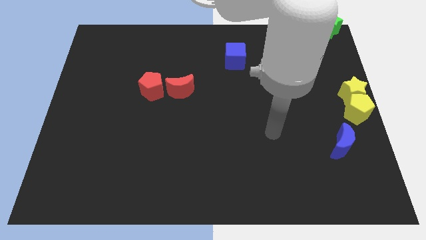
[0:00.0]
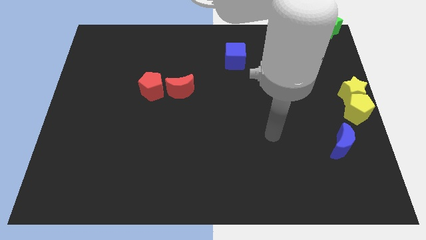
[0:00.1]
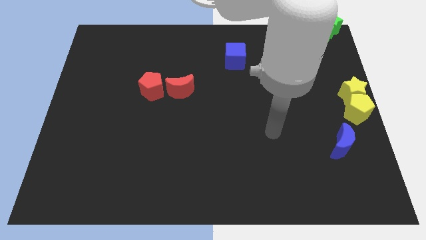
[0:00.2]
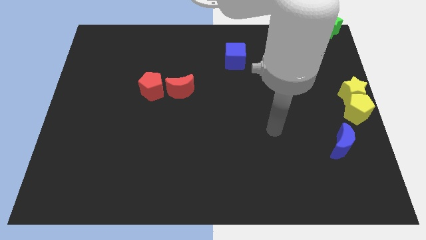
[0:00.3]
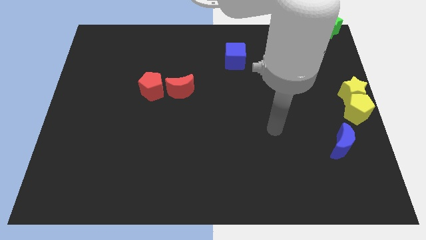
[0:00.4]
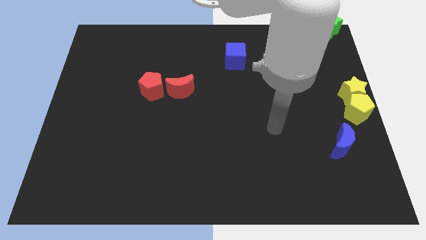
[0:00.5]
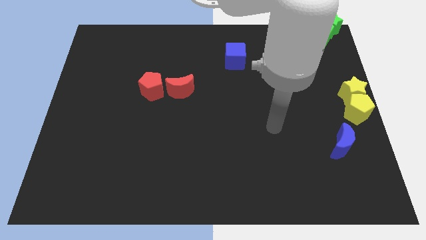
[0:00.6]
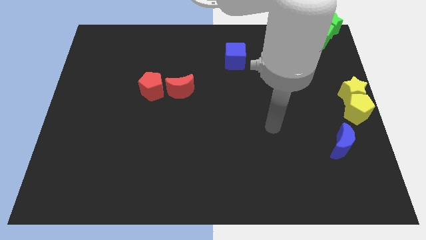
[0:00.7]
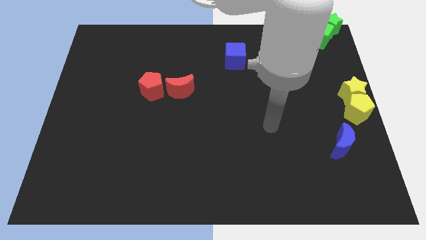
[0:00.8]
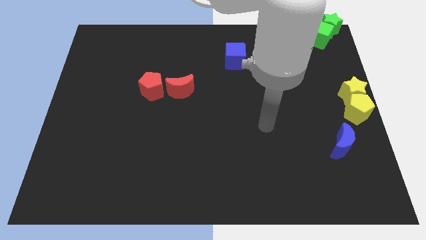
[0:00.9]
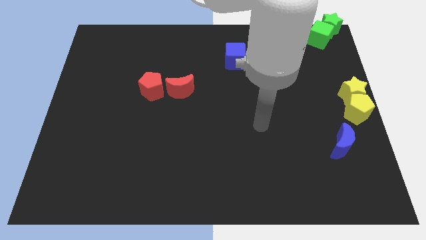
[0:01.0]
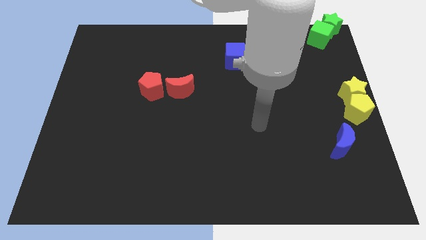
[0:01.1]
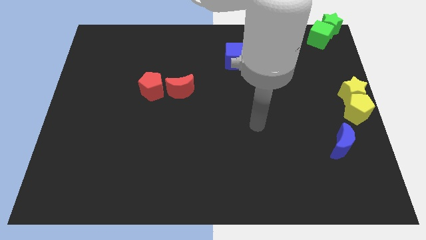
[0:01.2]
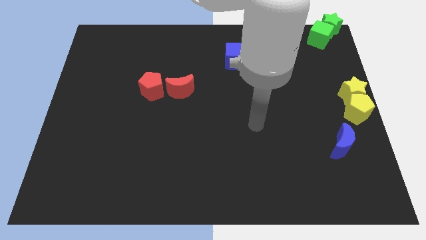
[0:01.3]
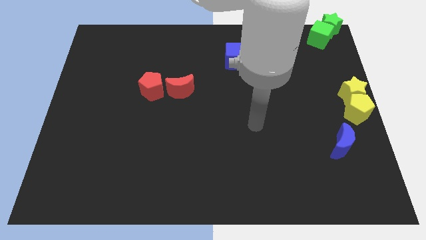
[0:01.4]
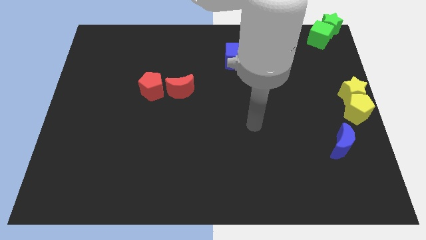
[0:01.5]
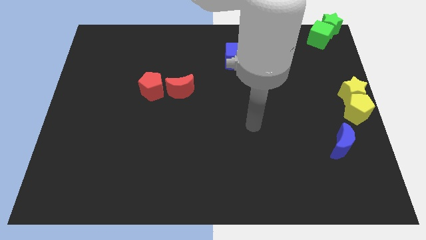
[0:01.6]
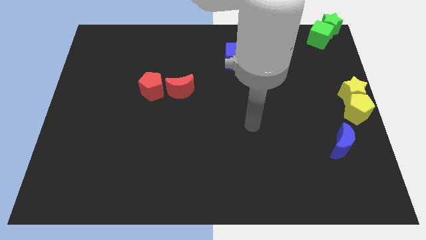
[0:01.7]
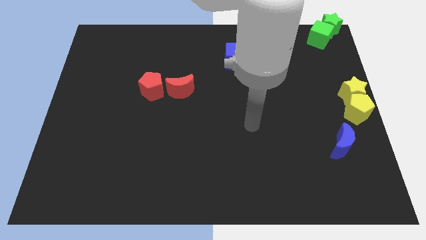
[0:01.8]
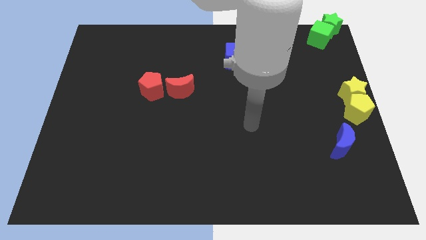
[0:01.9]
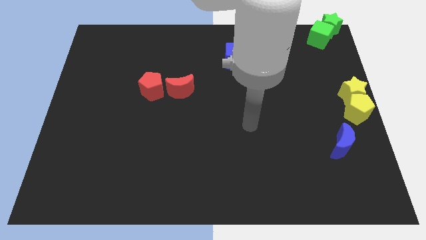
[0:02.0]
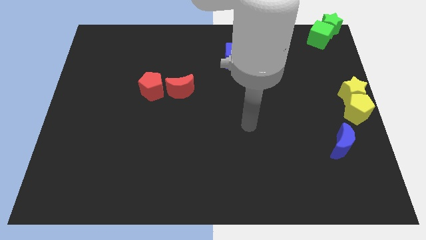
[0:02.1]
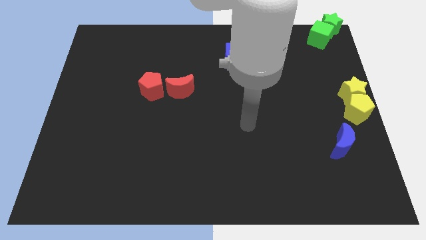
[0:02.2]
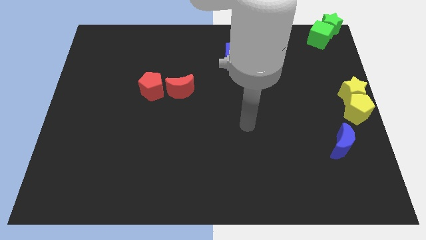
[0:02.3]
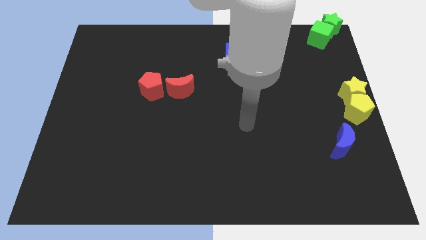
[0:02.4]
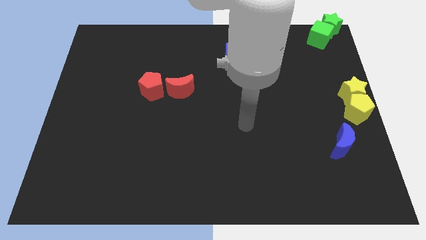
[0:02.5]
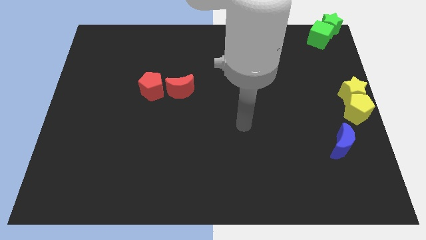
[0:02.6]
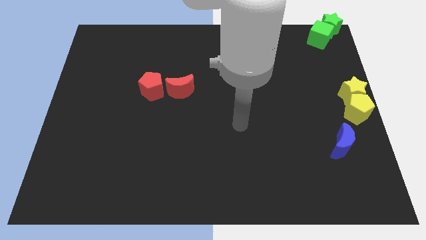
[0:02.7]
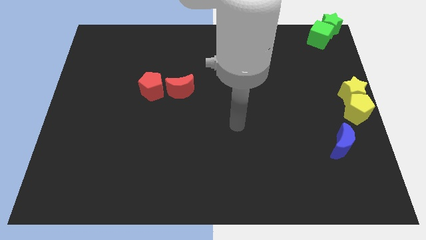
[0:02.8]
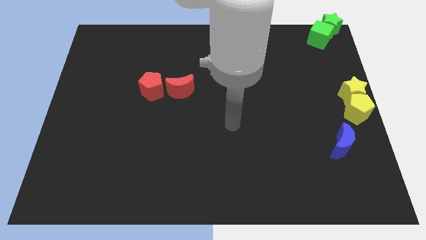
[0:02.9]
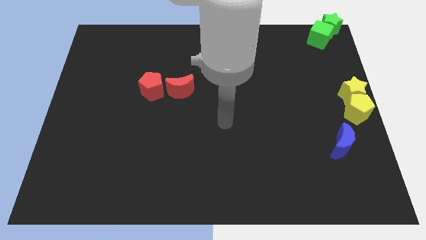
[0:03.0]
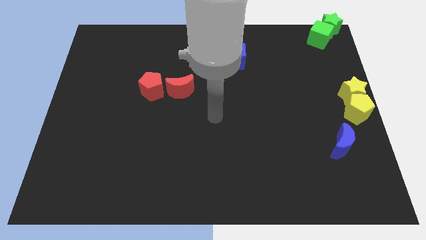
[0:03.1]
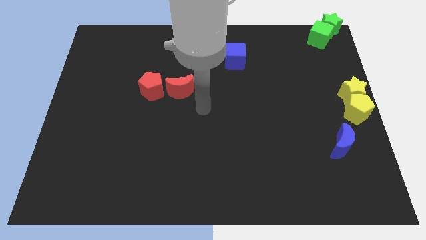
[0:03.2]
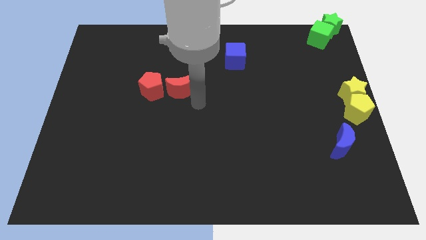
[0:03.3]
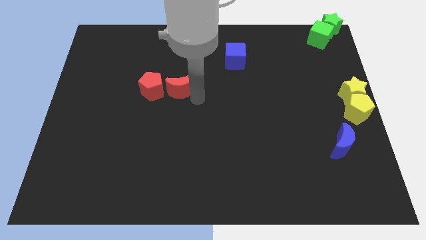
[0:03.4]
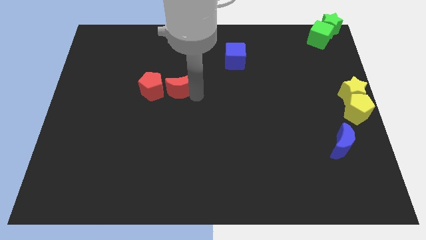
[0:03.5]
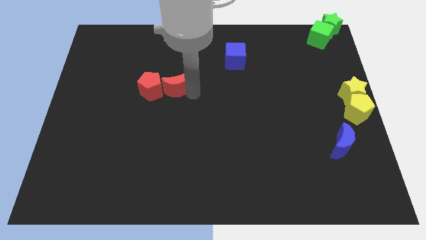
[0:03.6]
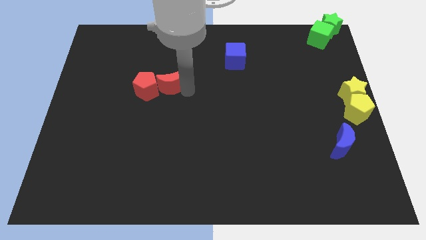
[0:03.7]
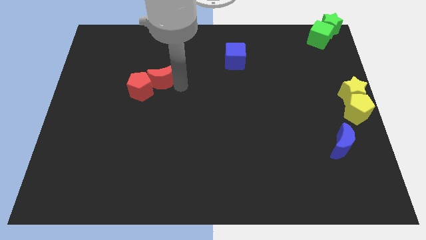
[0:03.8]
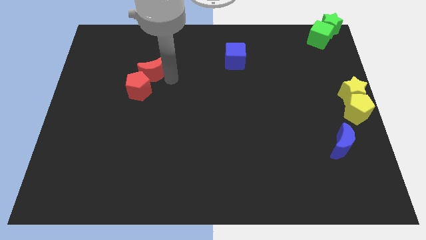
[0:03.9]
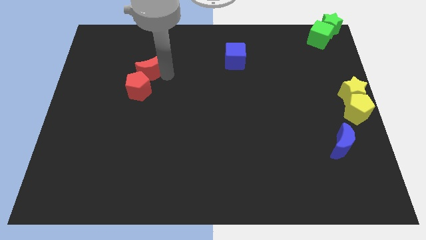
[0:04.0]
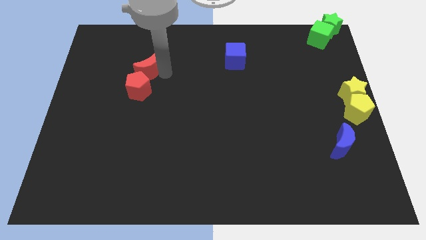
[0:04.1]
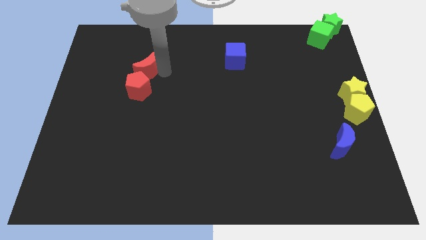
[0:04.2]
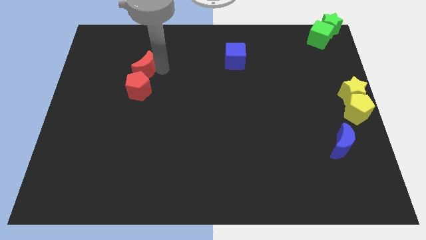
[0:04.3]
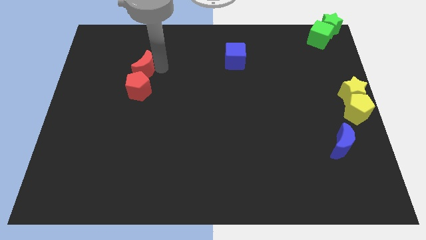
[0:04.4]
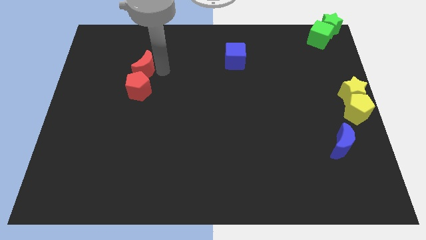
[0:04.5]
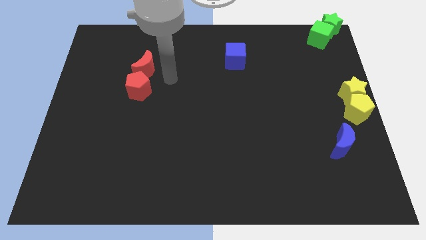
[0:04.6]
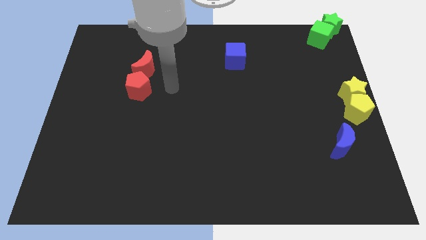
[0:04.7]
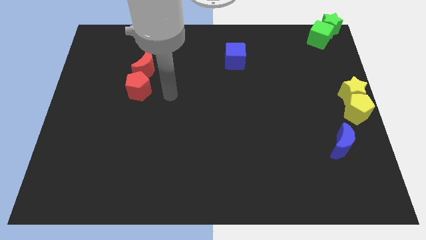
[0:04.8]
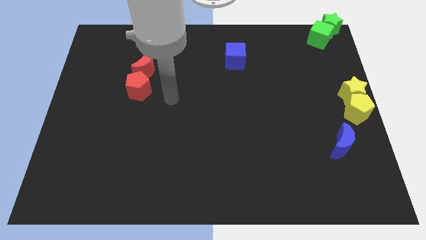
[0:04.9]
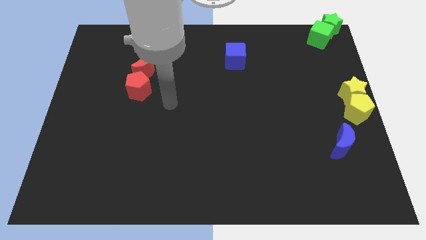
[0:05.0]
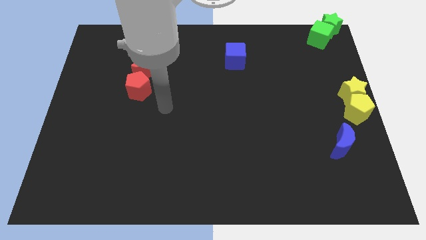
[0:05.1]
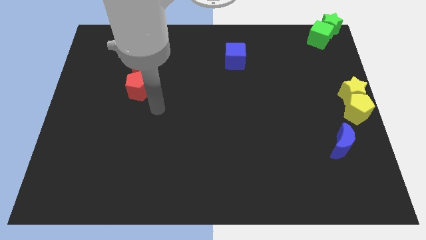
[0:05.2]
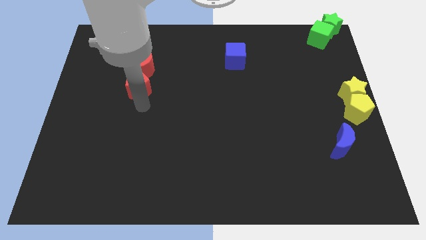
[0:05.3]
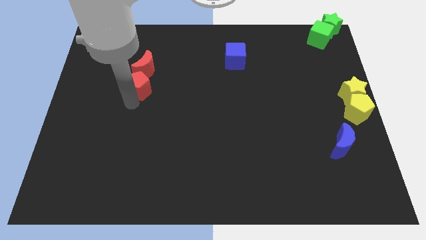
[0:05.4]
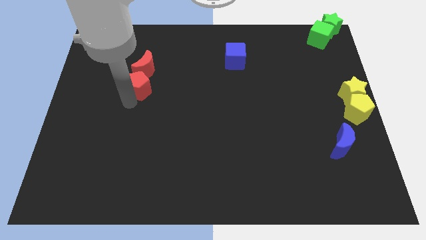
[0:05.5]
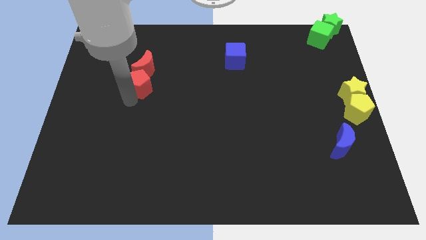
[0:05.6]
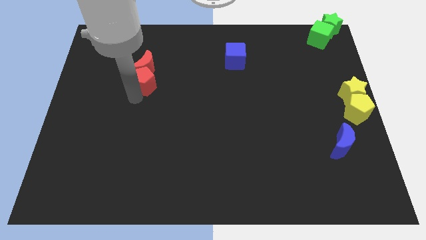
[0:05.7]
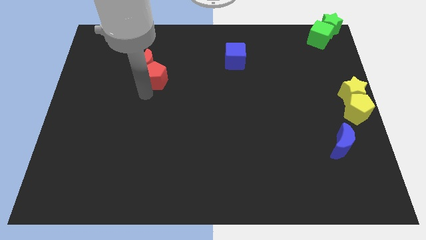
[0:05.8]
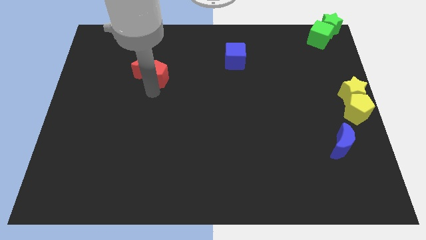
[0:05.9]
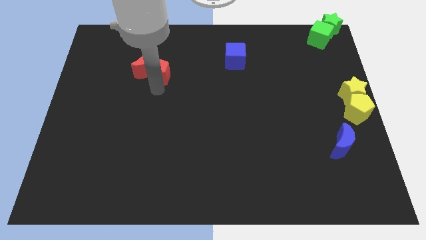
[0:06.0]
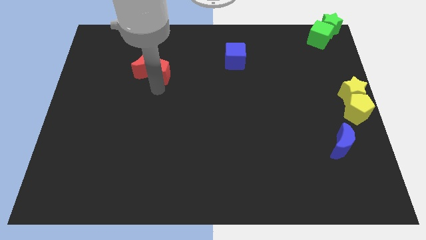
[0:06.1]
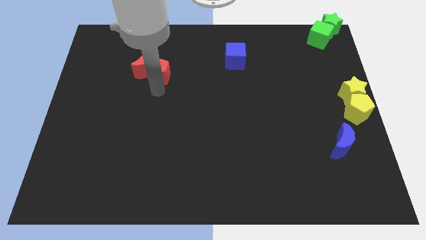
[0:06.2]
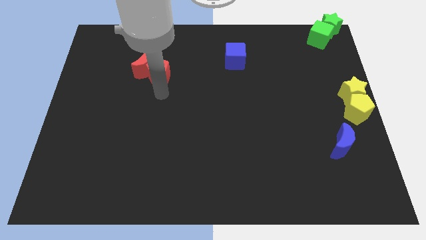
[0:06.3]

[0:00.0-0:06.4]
move the red pentagon along with the red crescent to the top left

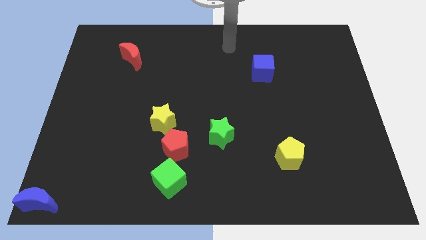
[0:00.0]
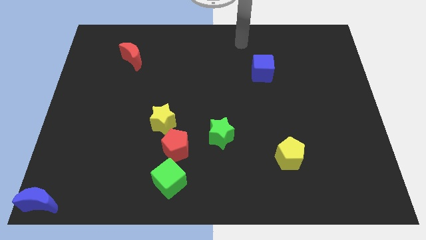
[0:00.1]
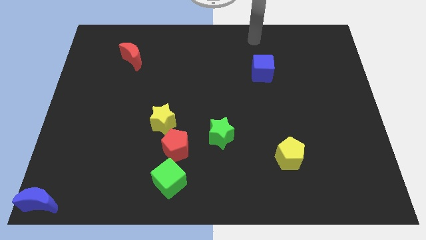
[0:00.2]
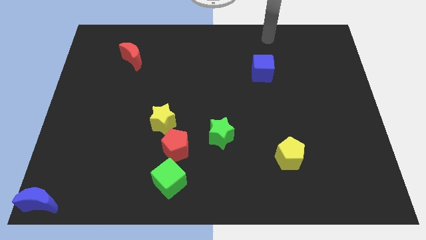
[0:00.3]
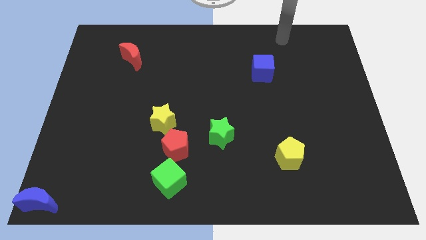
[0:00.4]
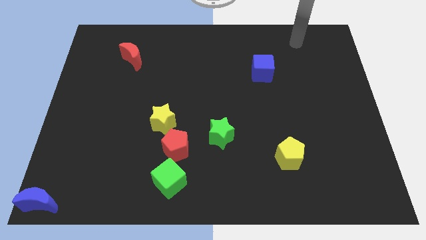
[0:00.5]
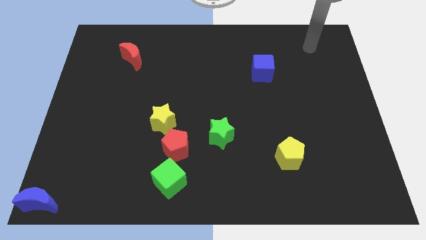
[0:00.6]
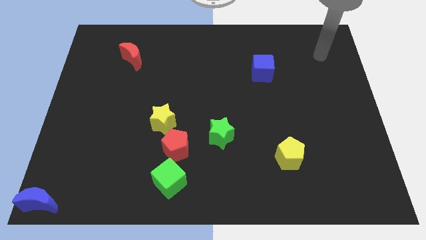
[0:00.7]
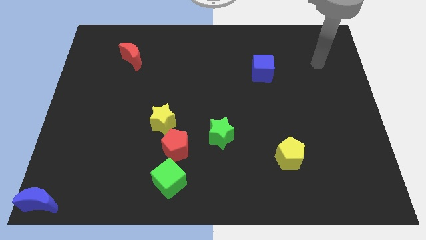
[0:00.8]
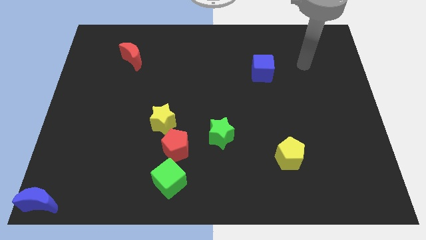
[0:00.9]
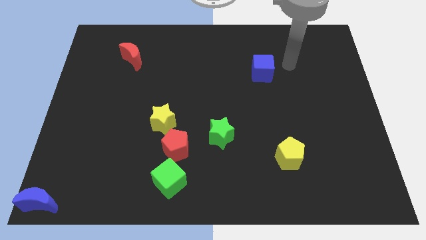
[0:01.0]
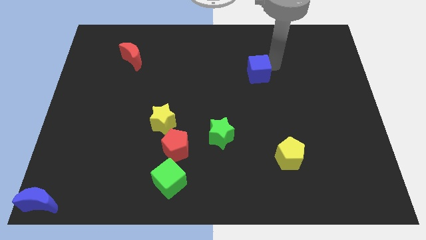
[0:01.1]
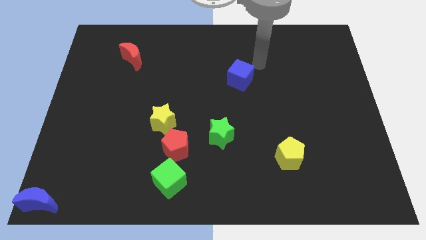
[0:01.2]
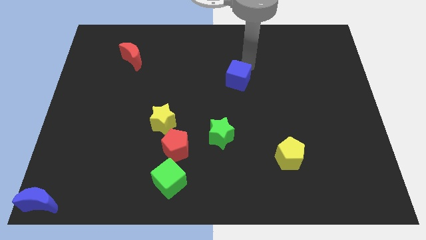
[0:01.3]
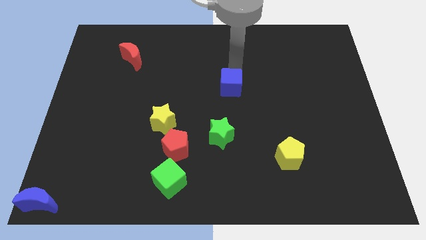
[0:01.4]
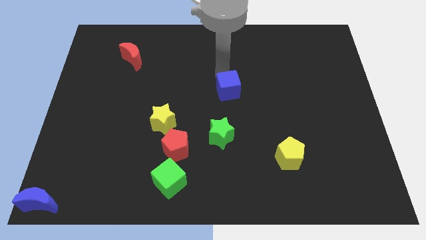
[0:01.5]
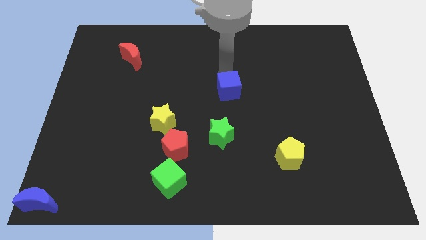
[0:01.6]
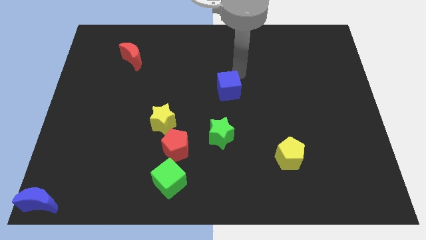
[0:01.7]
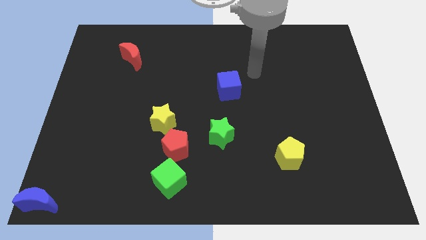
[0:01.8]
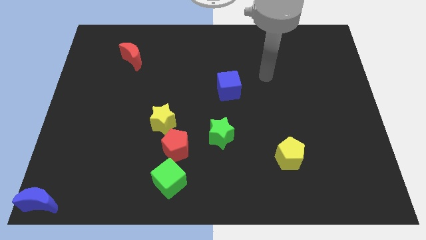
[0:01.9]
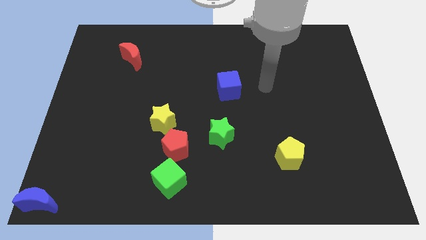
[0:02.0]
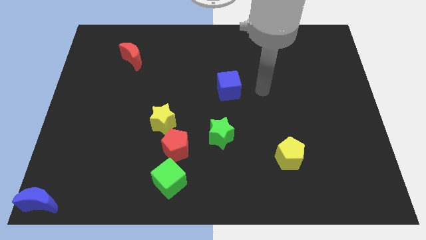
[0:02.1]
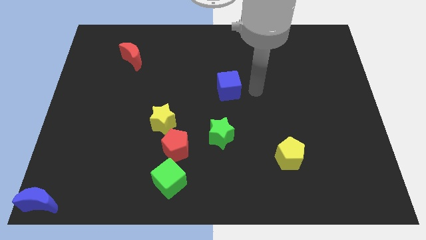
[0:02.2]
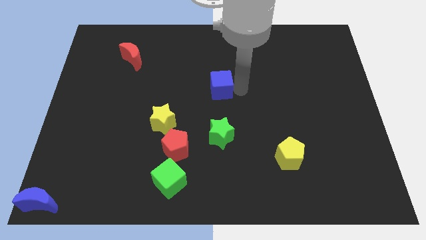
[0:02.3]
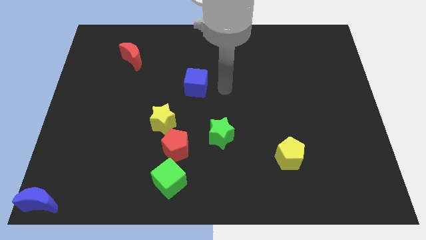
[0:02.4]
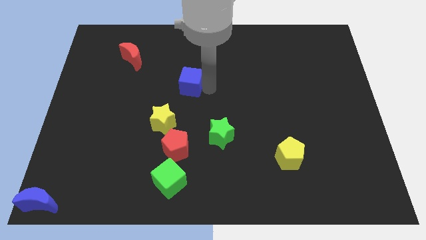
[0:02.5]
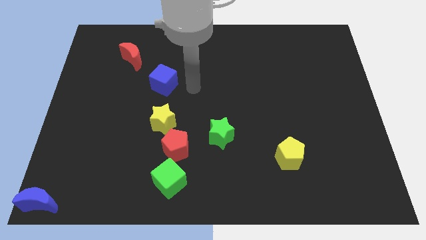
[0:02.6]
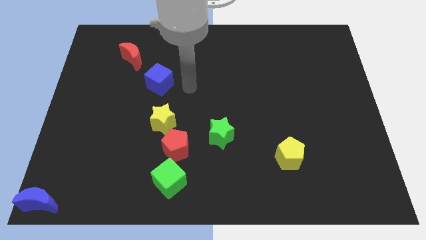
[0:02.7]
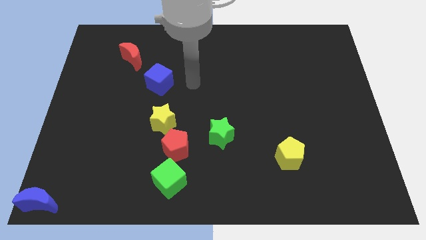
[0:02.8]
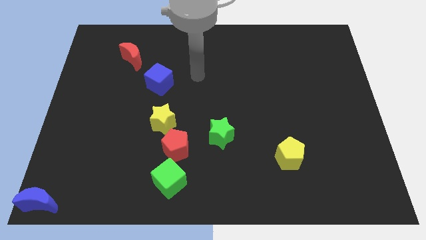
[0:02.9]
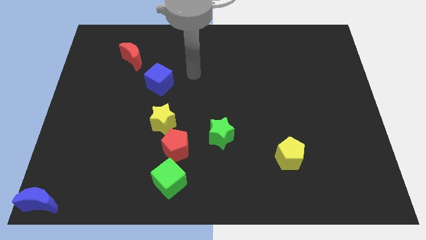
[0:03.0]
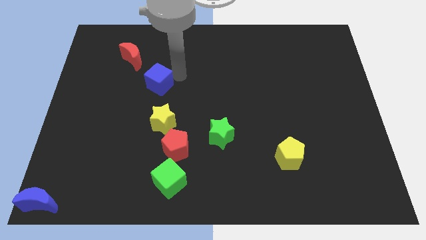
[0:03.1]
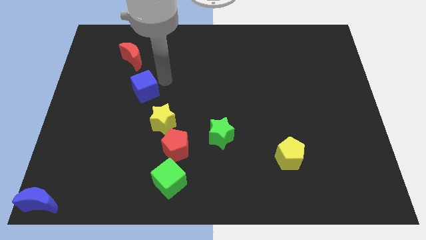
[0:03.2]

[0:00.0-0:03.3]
place blue cube in between red moon and yellow star
